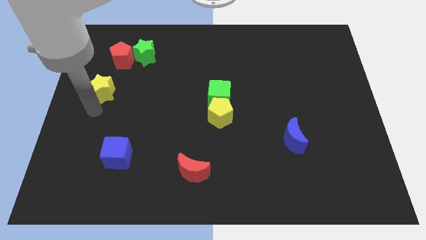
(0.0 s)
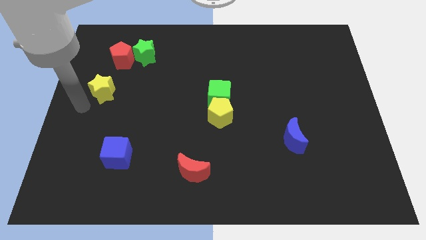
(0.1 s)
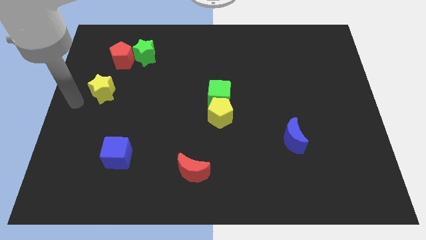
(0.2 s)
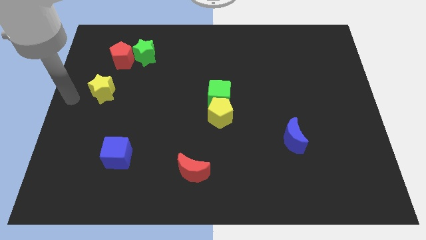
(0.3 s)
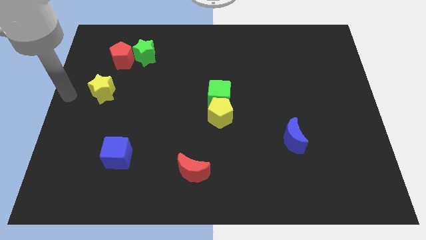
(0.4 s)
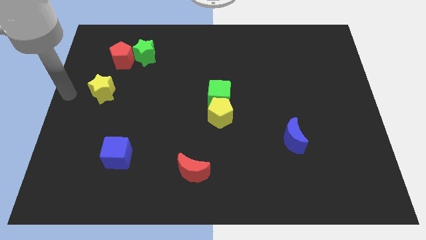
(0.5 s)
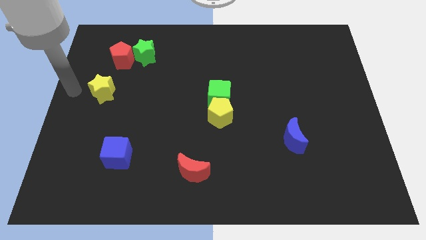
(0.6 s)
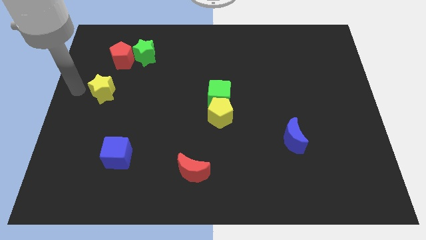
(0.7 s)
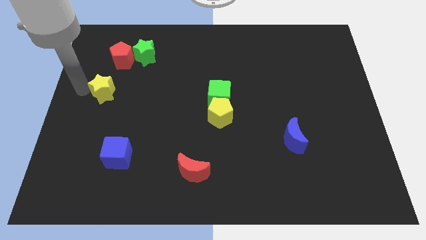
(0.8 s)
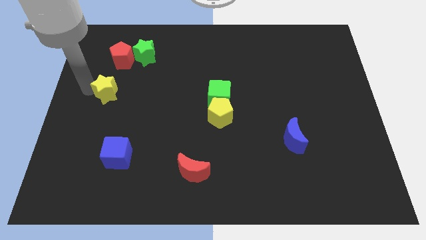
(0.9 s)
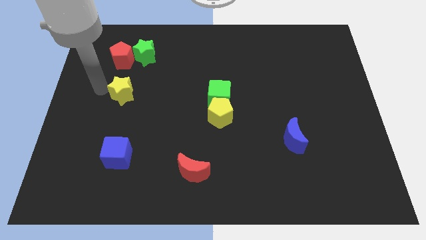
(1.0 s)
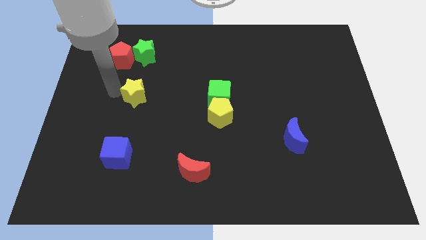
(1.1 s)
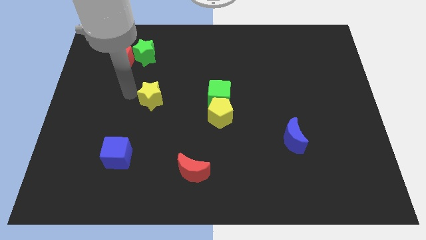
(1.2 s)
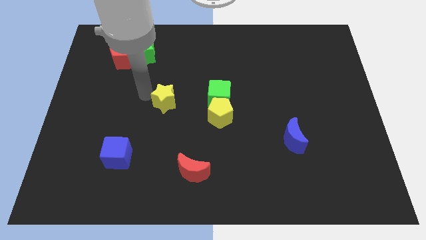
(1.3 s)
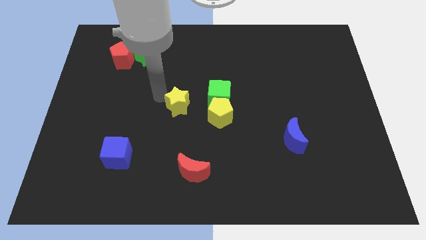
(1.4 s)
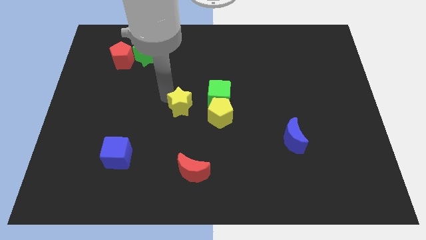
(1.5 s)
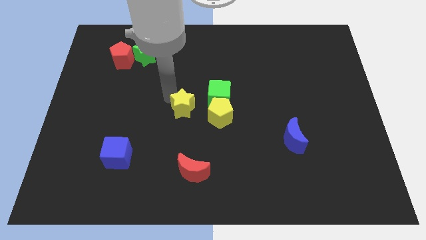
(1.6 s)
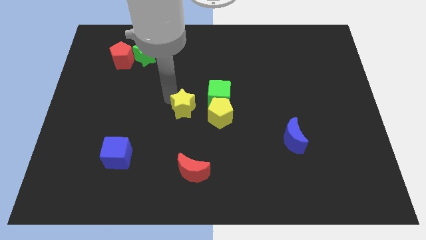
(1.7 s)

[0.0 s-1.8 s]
push the yellow star towards the right

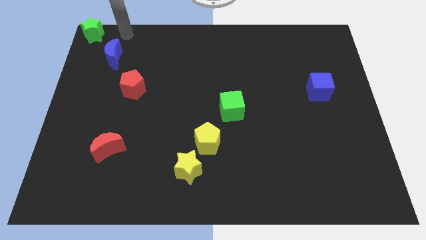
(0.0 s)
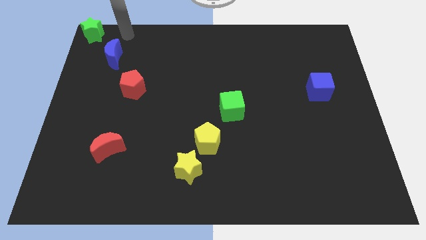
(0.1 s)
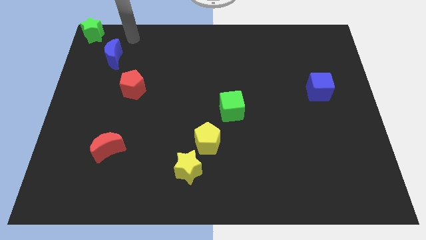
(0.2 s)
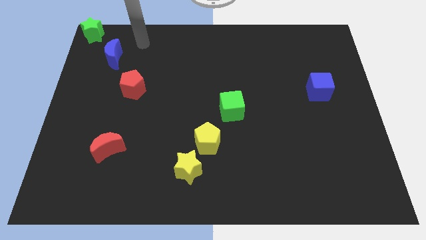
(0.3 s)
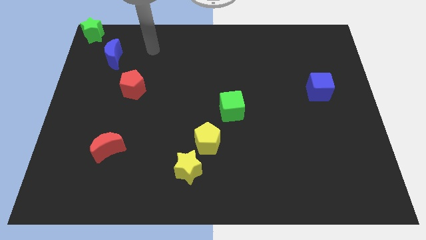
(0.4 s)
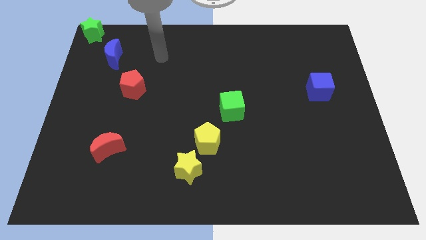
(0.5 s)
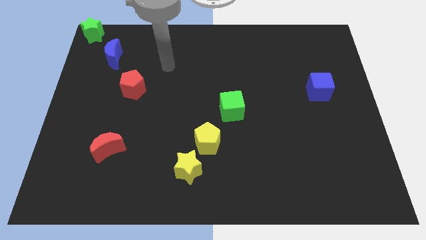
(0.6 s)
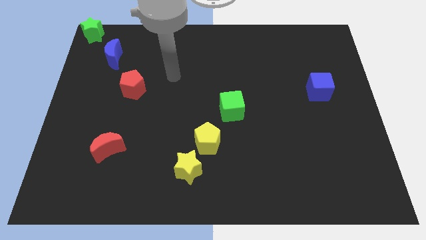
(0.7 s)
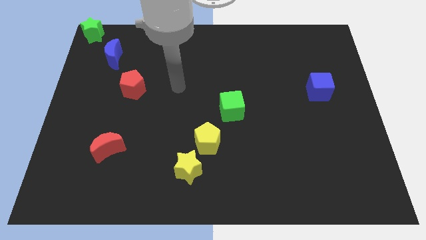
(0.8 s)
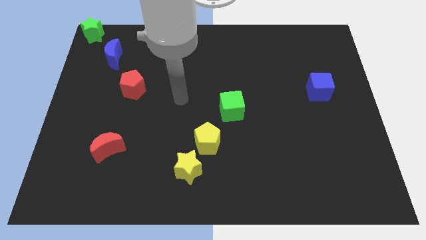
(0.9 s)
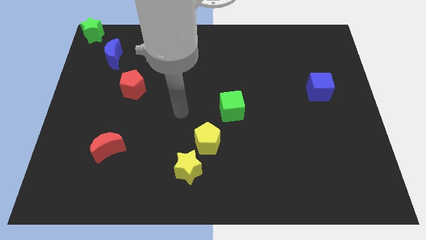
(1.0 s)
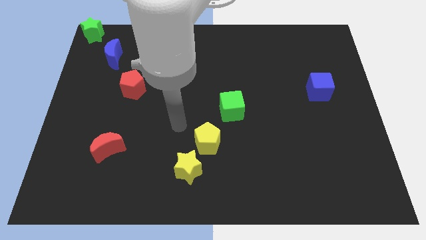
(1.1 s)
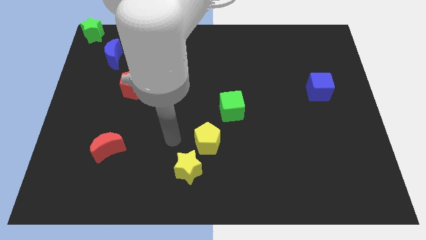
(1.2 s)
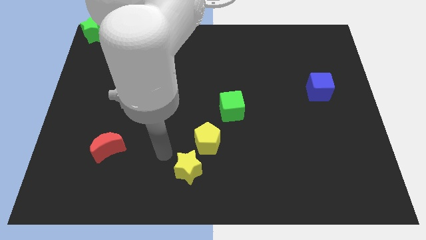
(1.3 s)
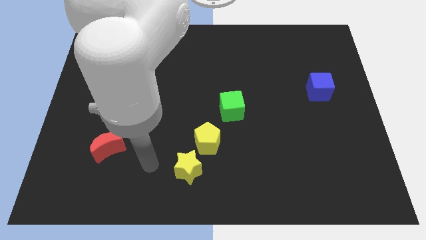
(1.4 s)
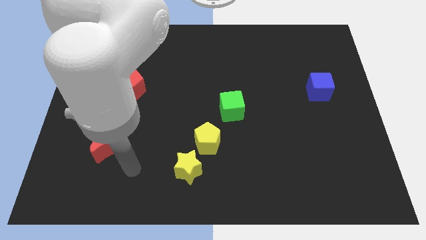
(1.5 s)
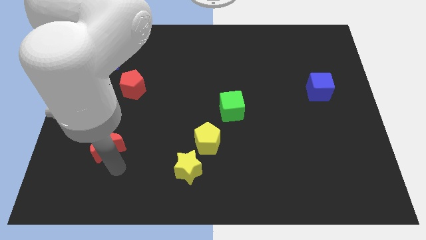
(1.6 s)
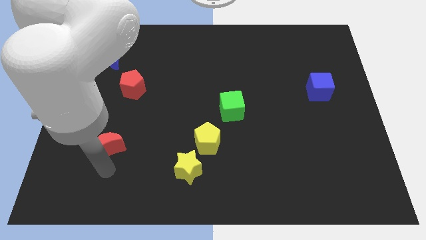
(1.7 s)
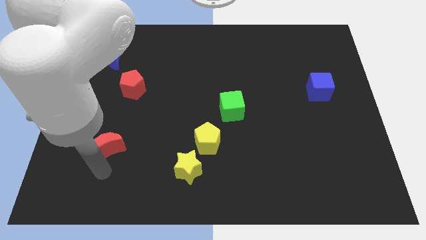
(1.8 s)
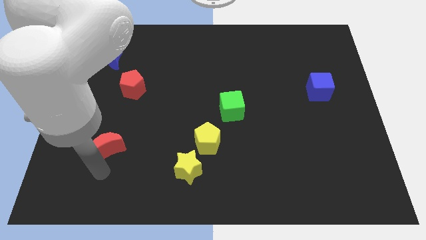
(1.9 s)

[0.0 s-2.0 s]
move your arm to the red crescent

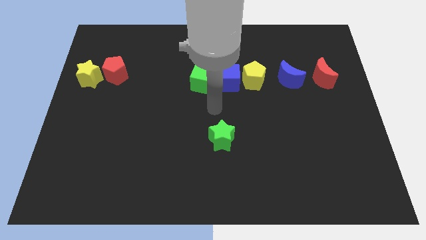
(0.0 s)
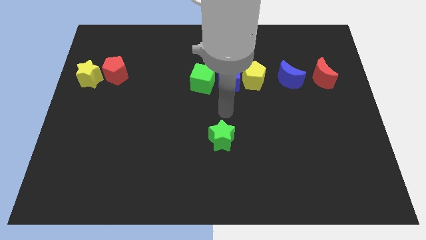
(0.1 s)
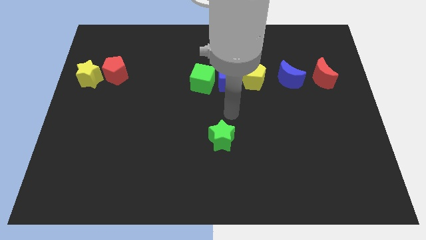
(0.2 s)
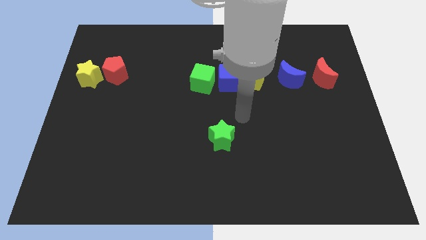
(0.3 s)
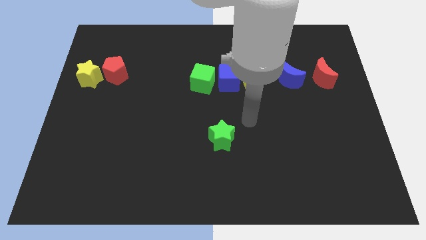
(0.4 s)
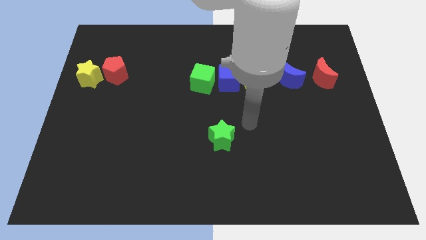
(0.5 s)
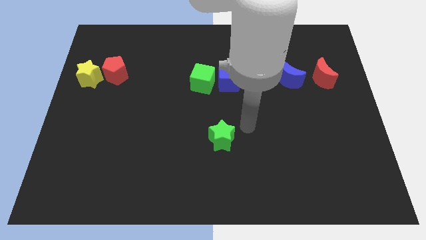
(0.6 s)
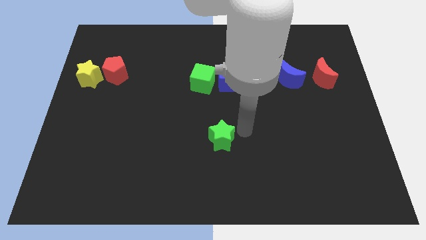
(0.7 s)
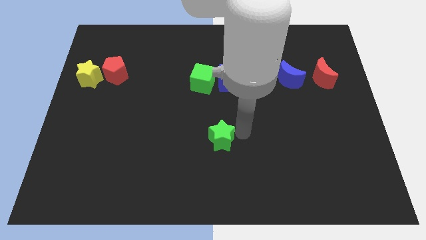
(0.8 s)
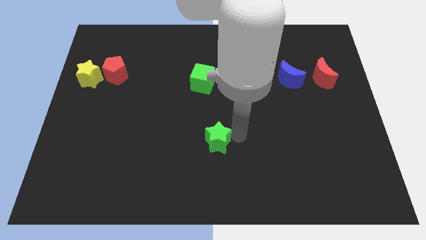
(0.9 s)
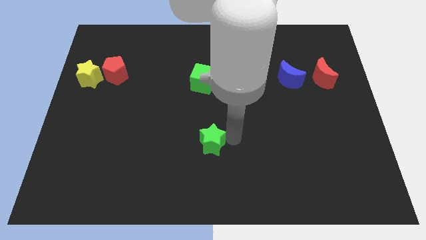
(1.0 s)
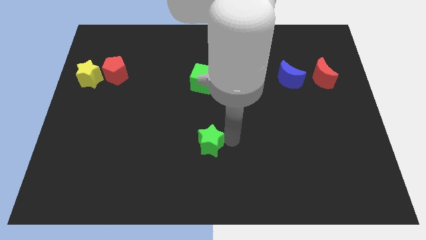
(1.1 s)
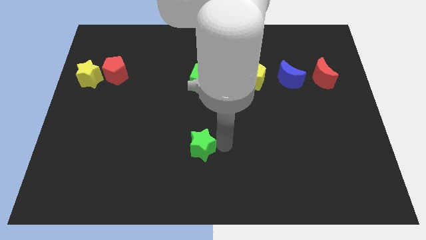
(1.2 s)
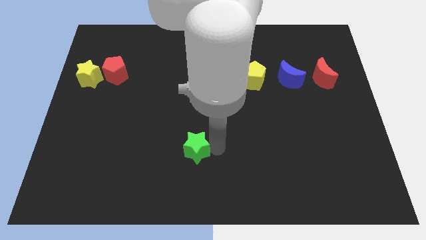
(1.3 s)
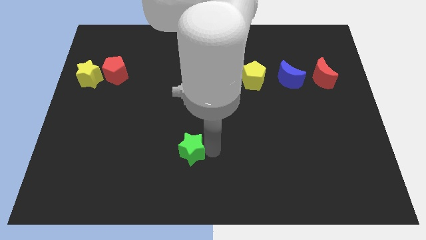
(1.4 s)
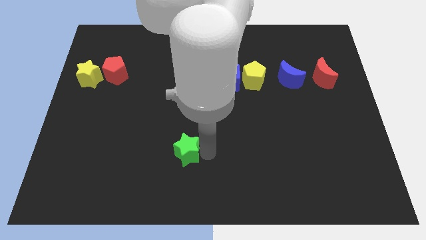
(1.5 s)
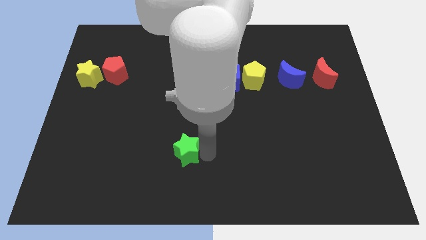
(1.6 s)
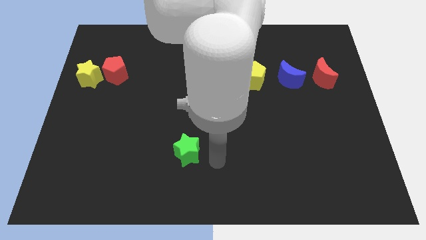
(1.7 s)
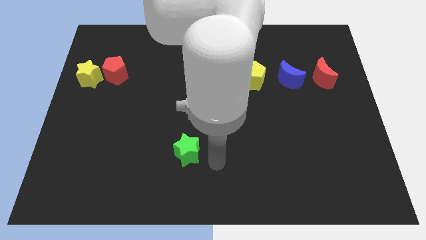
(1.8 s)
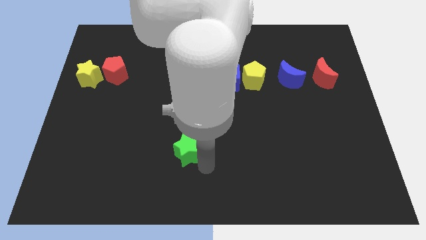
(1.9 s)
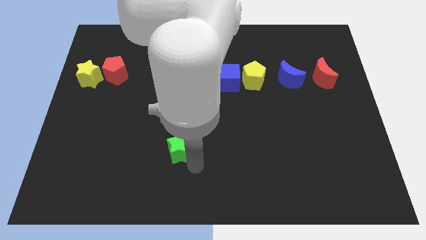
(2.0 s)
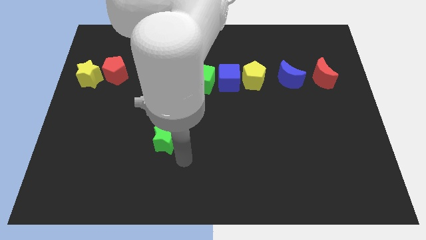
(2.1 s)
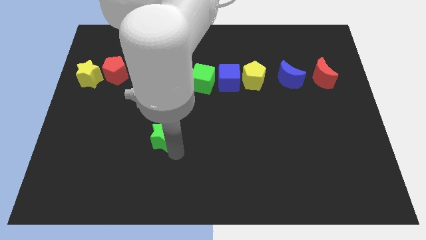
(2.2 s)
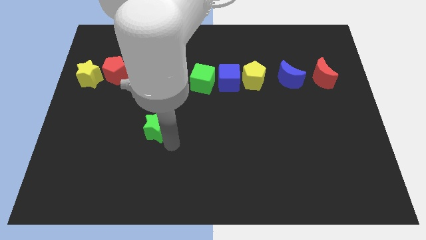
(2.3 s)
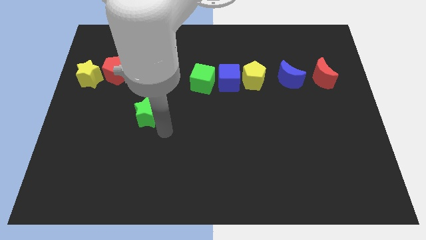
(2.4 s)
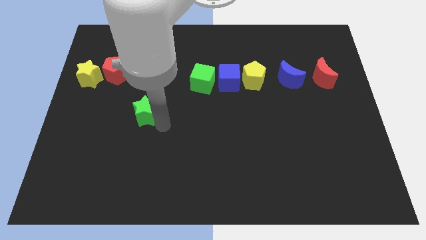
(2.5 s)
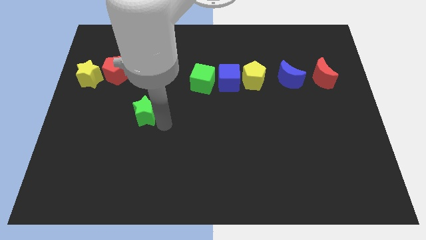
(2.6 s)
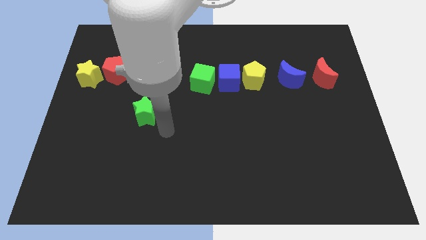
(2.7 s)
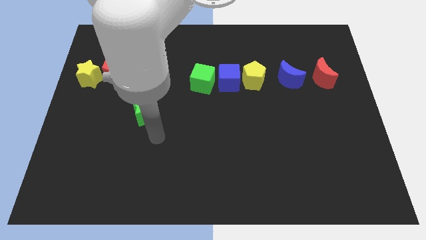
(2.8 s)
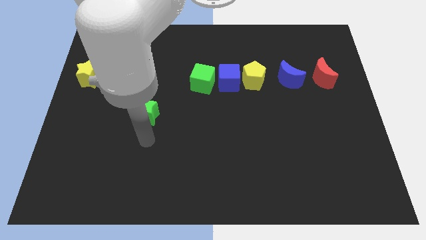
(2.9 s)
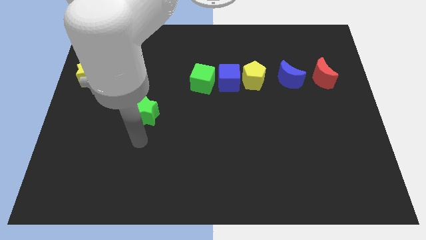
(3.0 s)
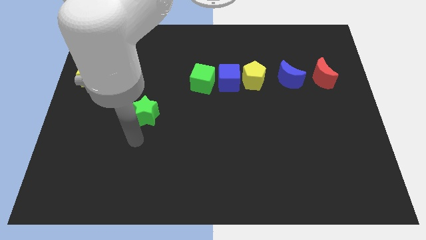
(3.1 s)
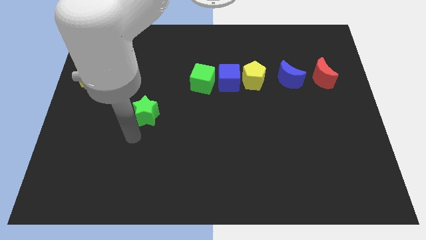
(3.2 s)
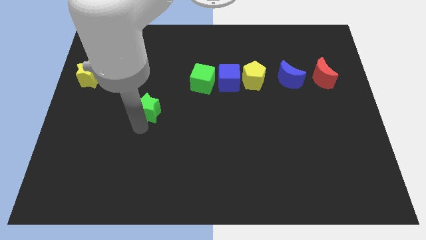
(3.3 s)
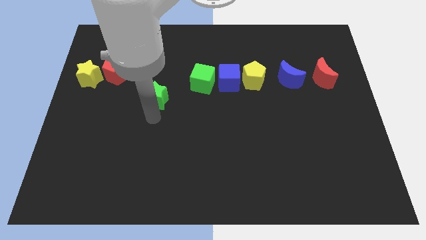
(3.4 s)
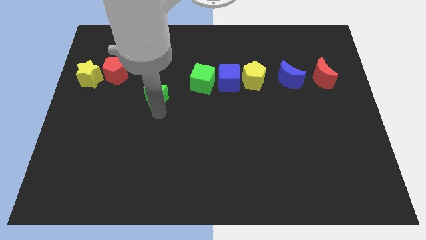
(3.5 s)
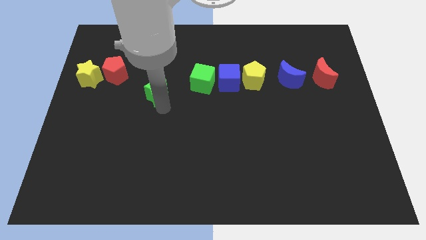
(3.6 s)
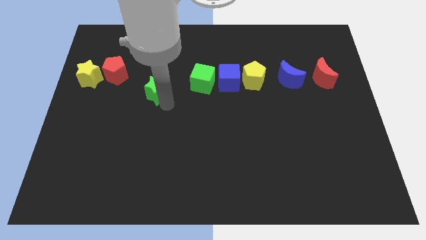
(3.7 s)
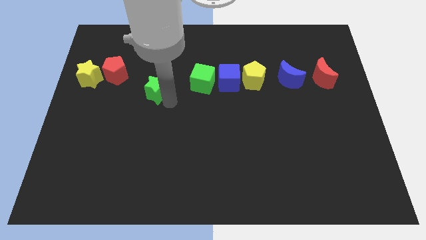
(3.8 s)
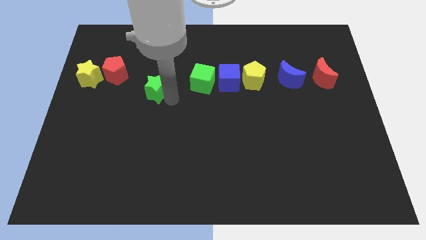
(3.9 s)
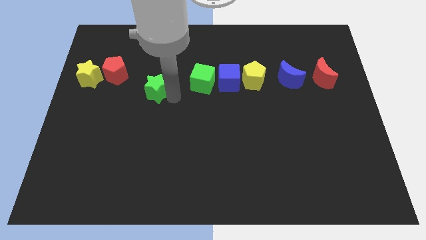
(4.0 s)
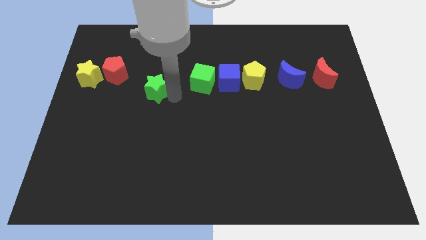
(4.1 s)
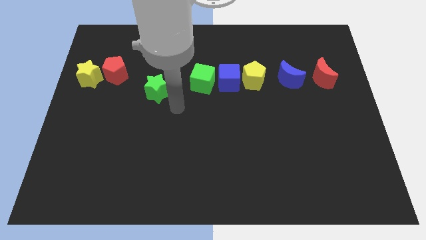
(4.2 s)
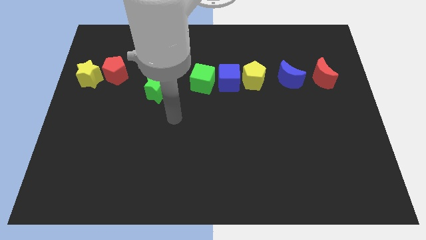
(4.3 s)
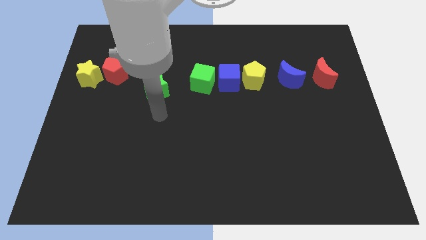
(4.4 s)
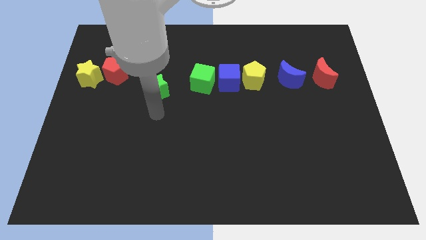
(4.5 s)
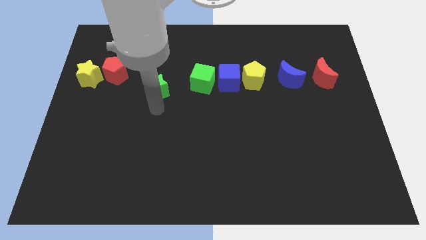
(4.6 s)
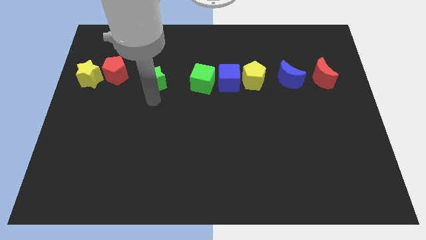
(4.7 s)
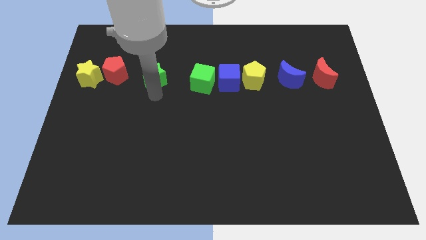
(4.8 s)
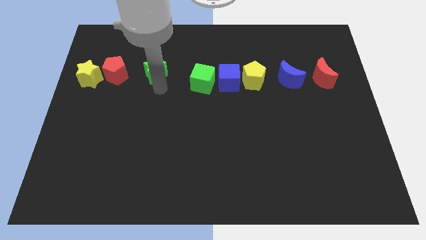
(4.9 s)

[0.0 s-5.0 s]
place the green star in between the green cube and red pentagon

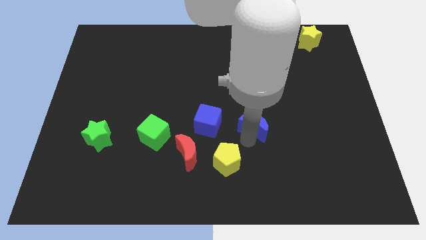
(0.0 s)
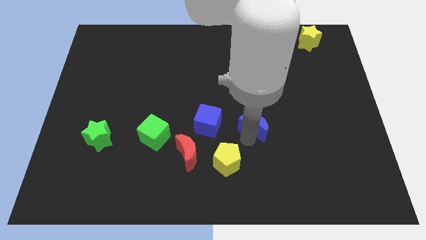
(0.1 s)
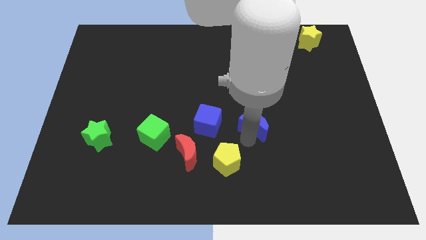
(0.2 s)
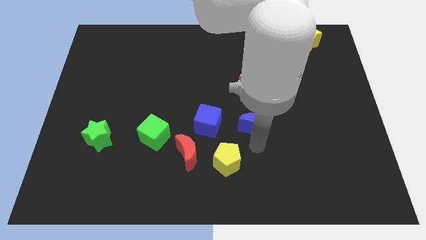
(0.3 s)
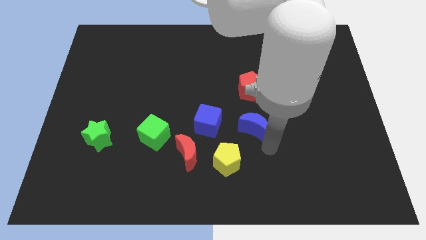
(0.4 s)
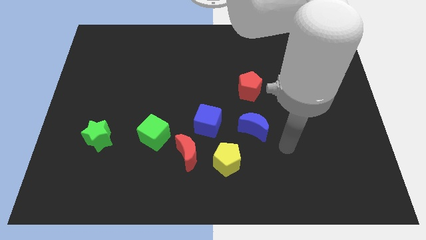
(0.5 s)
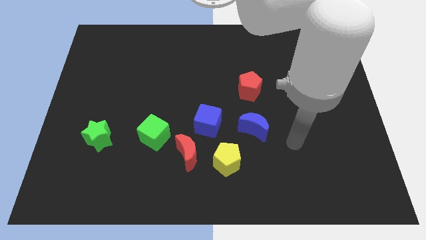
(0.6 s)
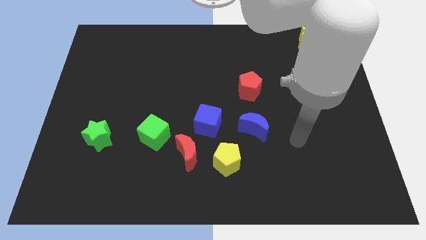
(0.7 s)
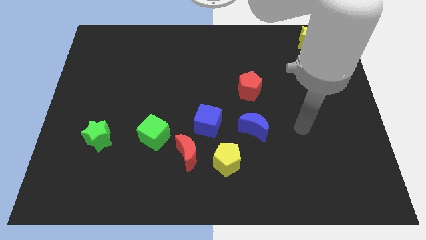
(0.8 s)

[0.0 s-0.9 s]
move away from the blue moon
